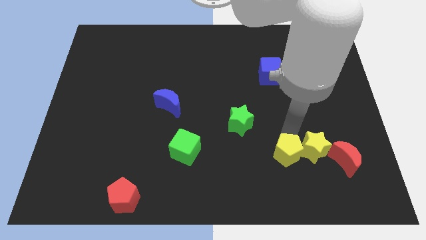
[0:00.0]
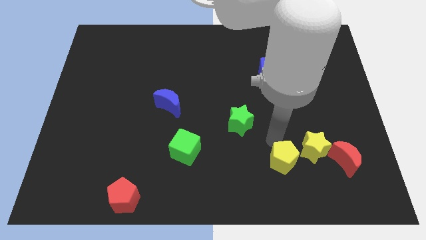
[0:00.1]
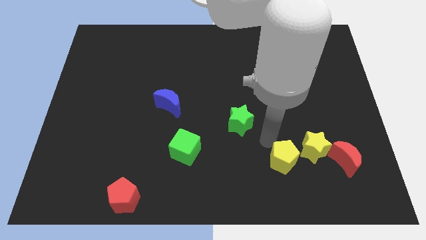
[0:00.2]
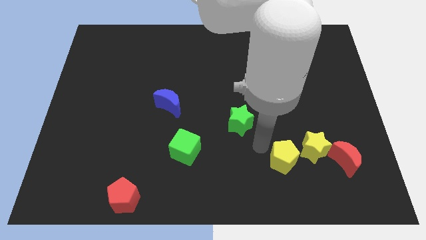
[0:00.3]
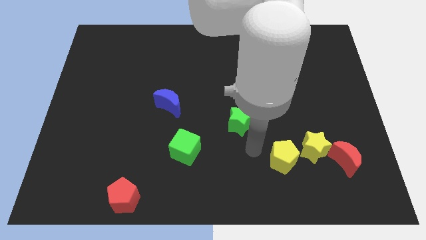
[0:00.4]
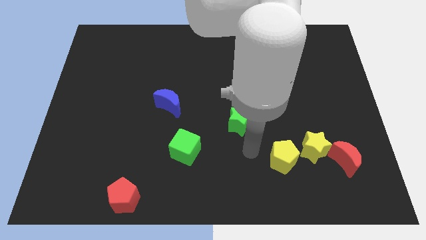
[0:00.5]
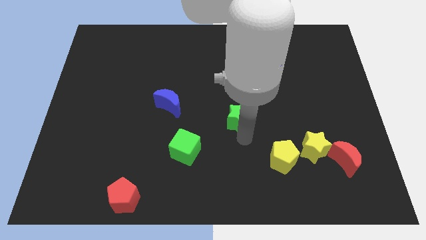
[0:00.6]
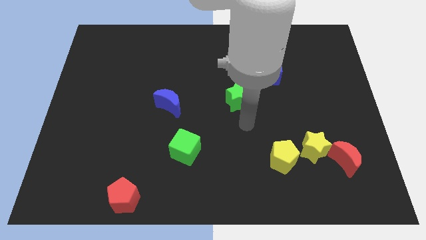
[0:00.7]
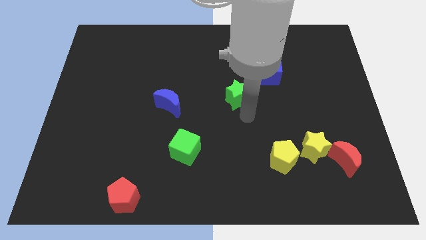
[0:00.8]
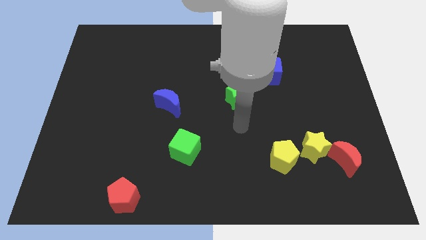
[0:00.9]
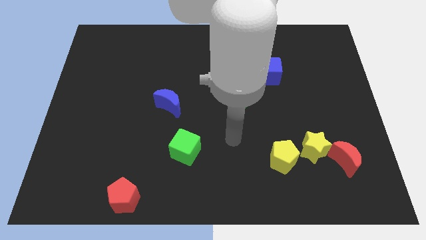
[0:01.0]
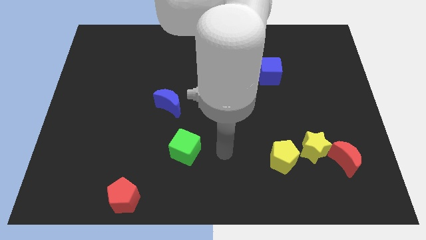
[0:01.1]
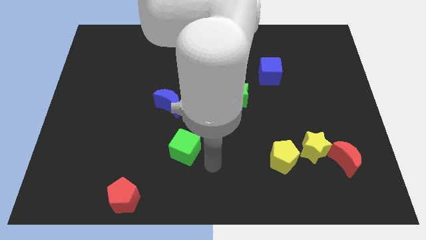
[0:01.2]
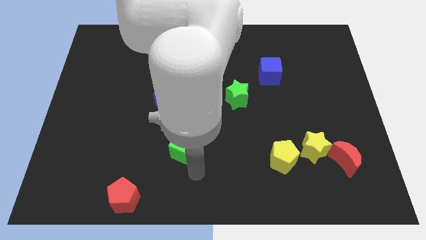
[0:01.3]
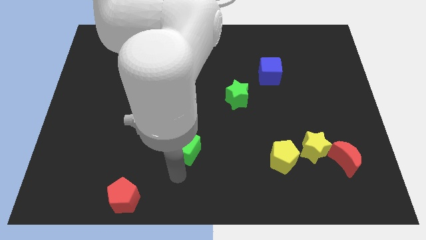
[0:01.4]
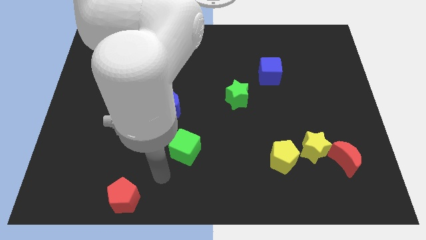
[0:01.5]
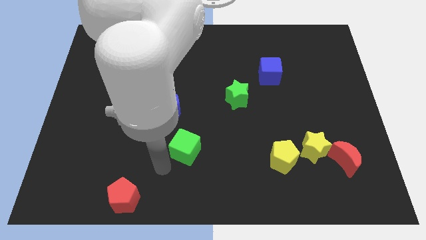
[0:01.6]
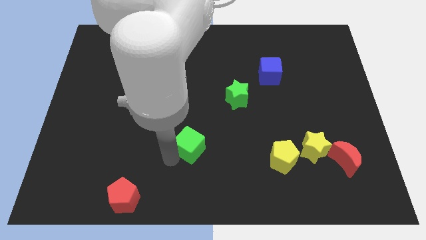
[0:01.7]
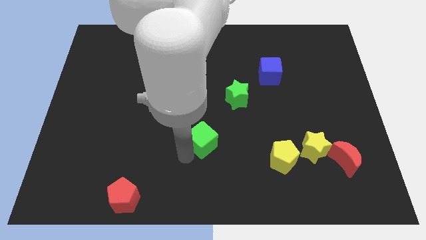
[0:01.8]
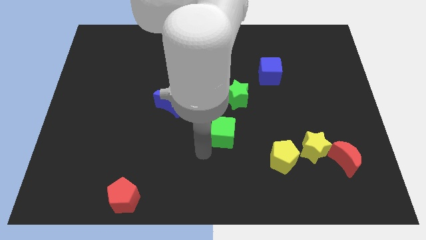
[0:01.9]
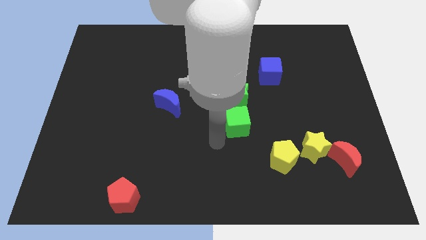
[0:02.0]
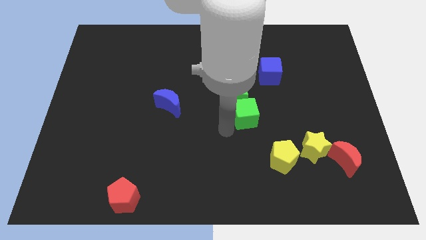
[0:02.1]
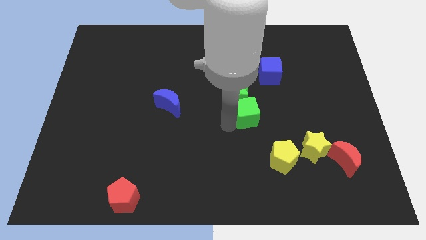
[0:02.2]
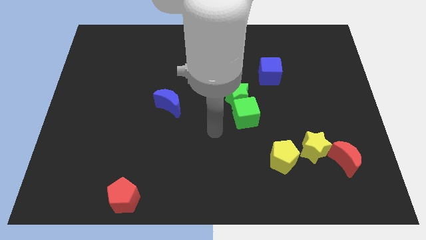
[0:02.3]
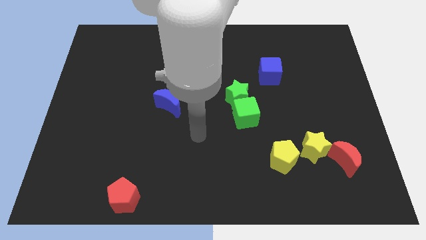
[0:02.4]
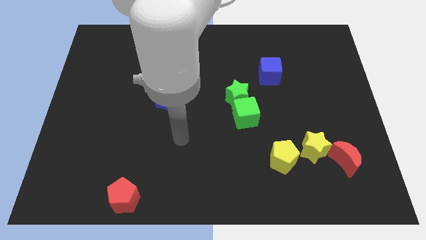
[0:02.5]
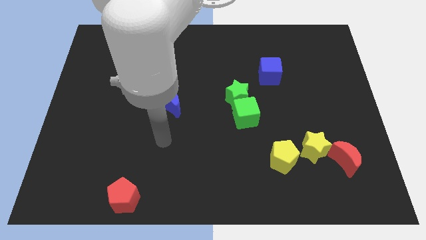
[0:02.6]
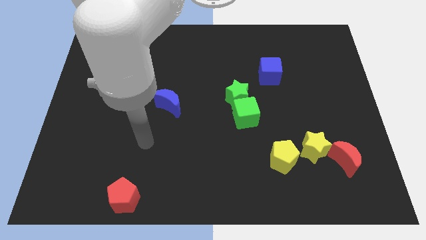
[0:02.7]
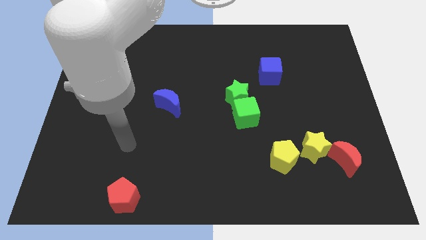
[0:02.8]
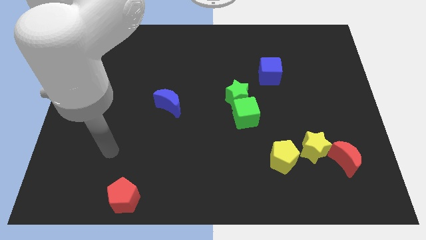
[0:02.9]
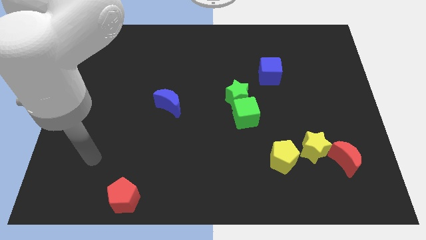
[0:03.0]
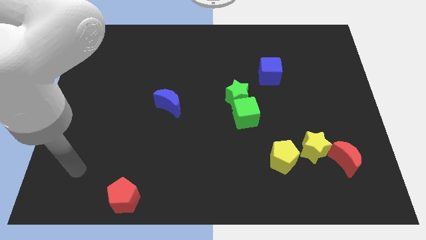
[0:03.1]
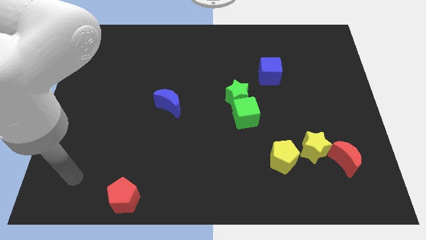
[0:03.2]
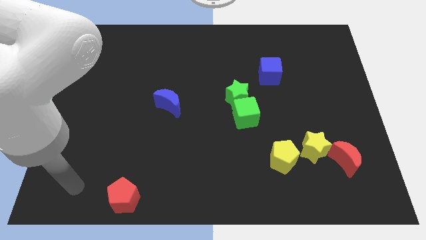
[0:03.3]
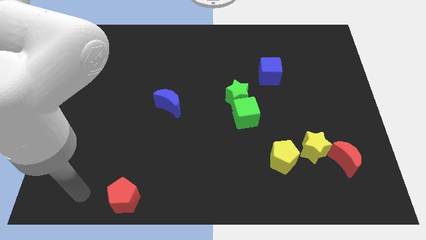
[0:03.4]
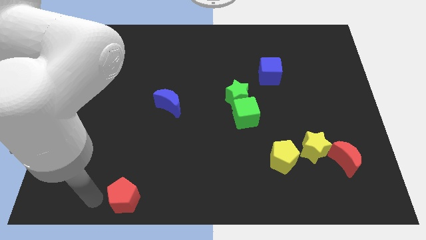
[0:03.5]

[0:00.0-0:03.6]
push green cube near to green star

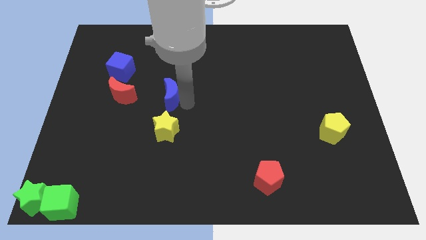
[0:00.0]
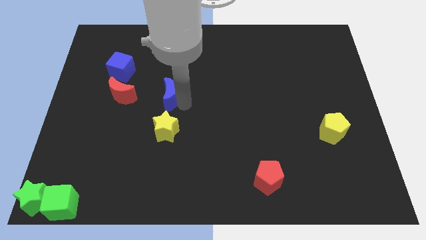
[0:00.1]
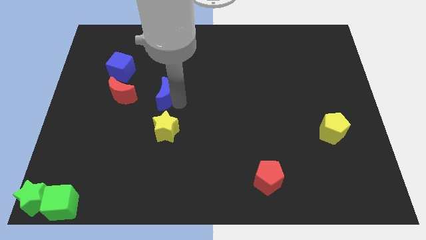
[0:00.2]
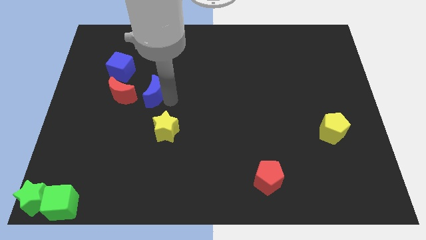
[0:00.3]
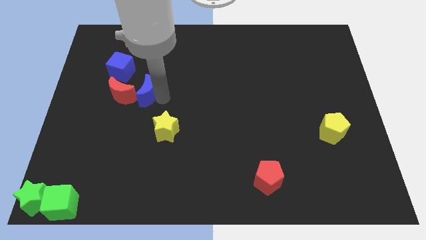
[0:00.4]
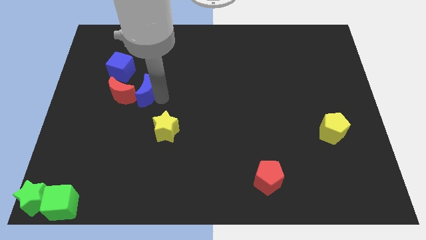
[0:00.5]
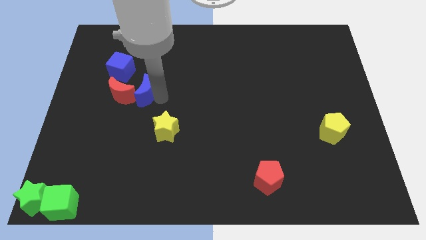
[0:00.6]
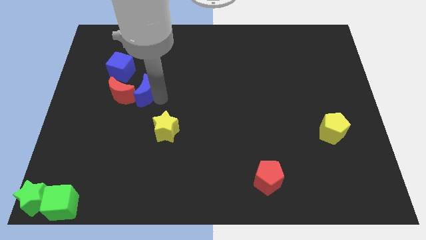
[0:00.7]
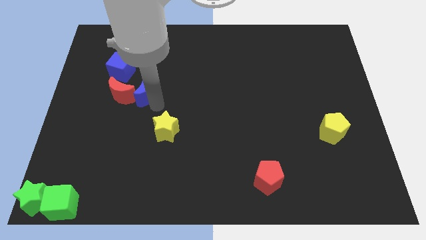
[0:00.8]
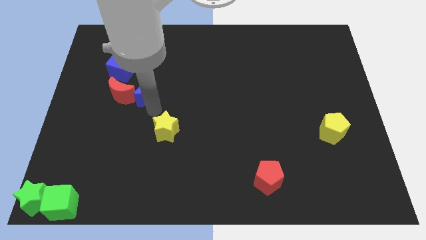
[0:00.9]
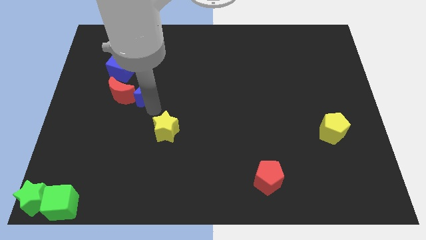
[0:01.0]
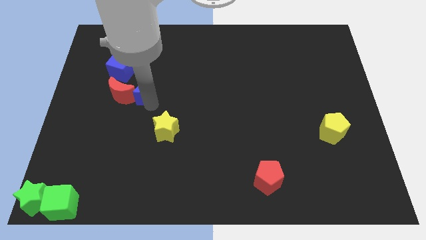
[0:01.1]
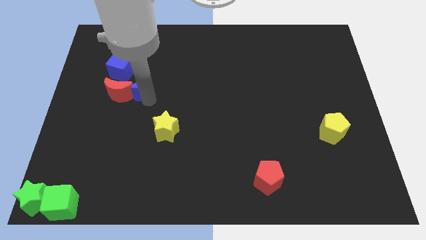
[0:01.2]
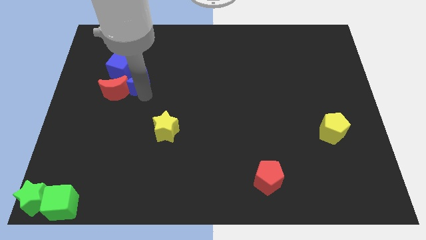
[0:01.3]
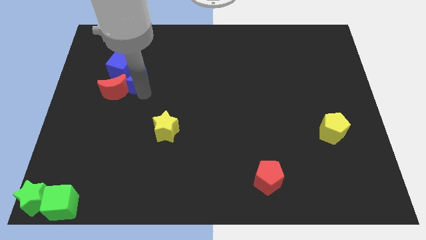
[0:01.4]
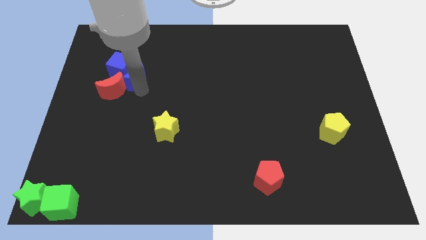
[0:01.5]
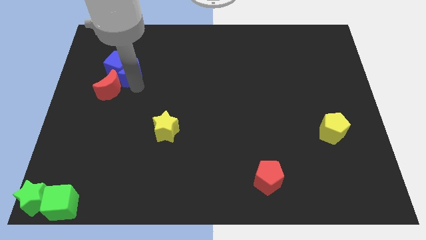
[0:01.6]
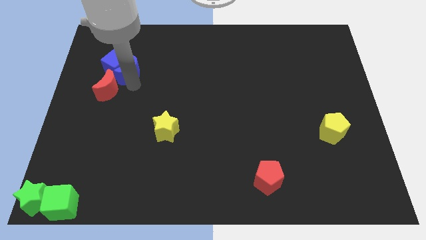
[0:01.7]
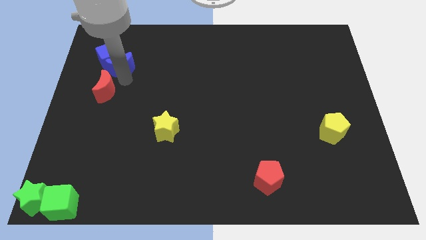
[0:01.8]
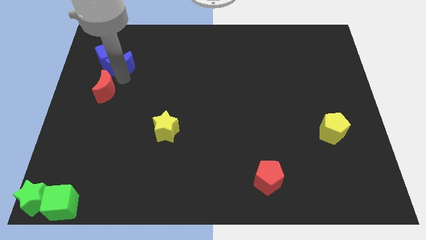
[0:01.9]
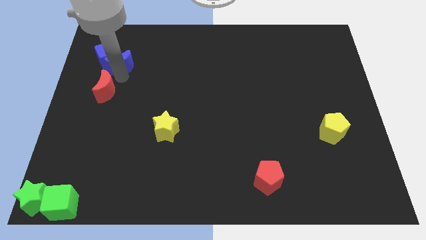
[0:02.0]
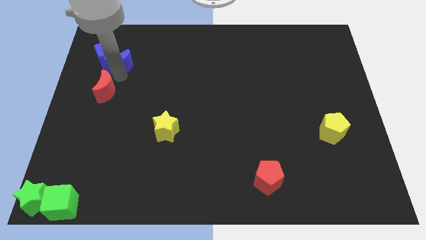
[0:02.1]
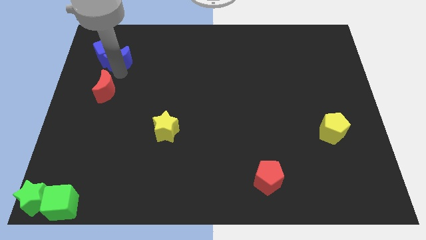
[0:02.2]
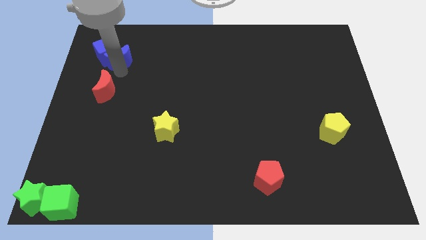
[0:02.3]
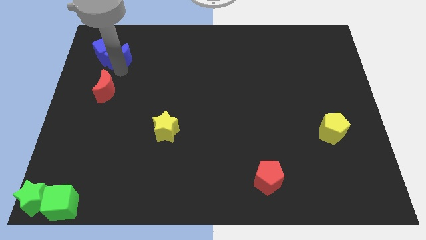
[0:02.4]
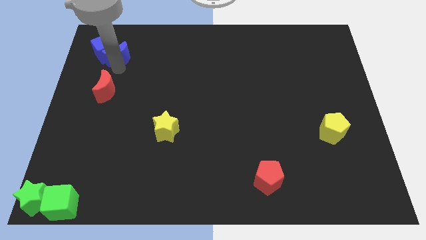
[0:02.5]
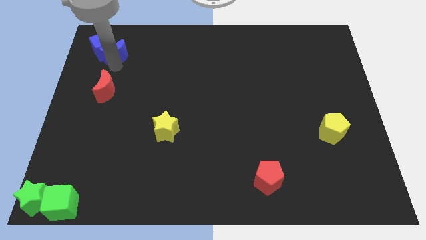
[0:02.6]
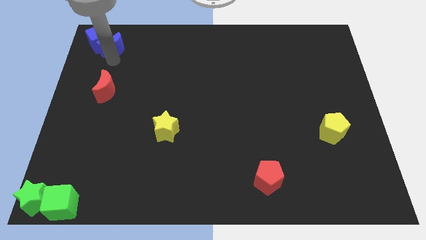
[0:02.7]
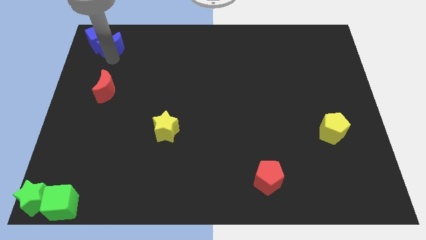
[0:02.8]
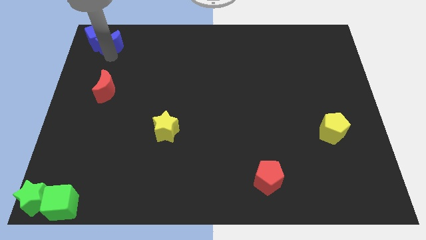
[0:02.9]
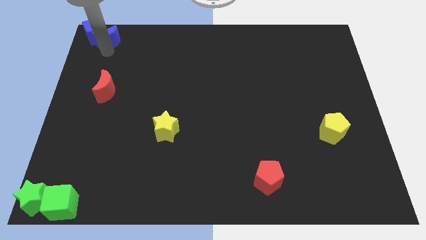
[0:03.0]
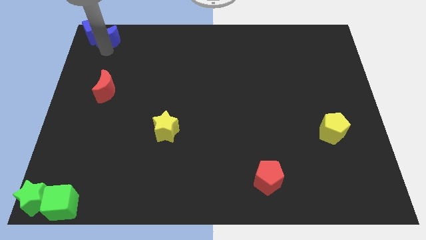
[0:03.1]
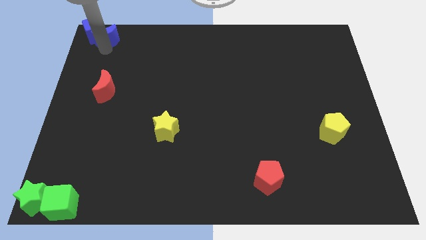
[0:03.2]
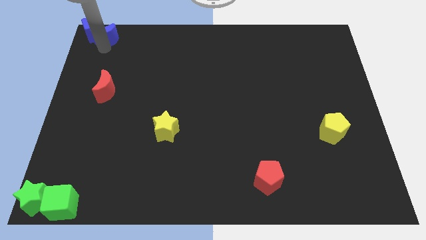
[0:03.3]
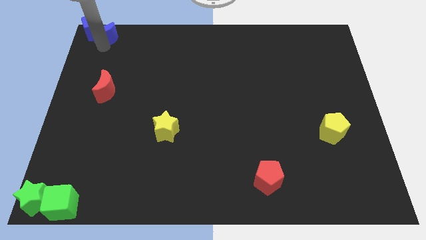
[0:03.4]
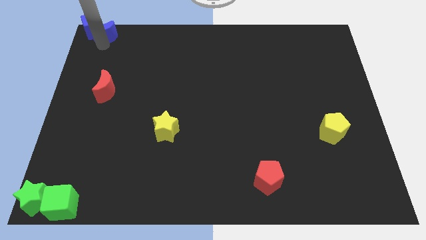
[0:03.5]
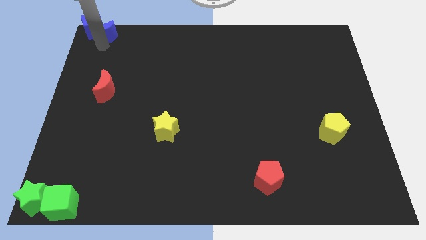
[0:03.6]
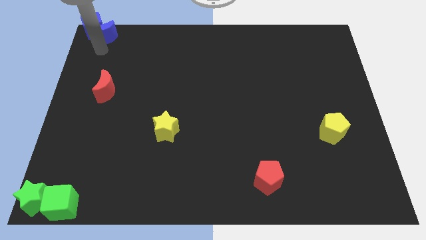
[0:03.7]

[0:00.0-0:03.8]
push blue blocks to top left corner

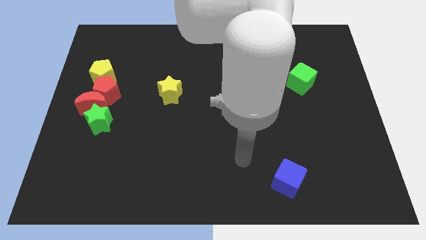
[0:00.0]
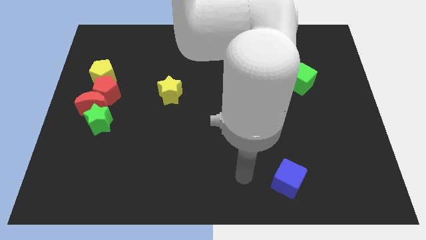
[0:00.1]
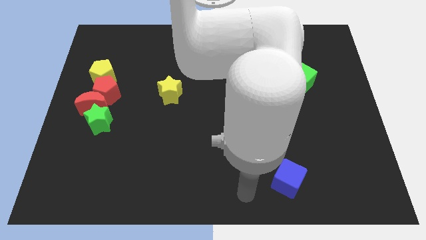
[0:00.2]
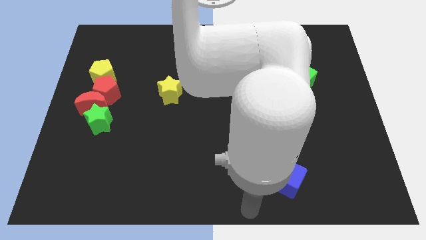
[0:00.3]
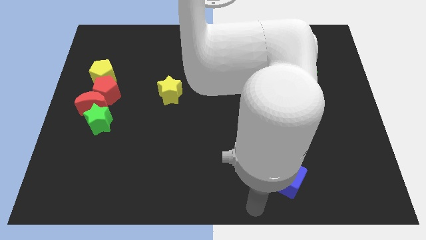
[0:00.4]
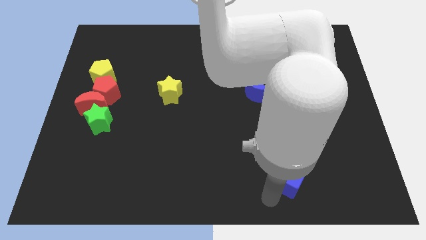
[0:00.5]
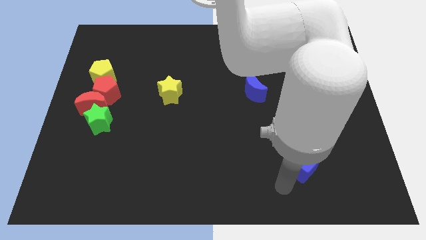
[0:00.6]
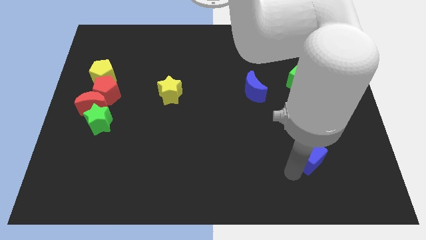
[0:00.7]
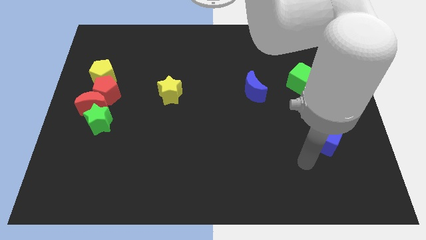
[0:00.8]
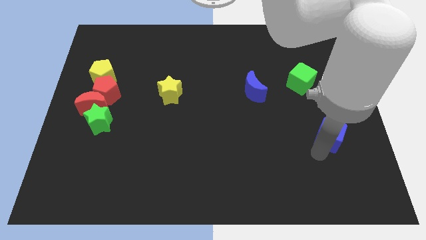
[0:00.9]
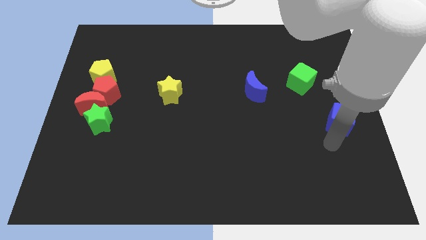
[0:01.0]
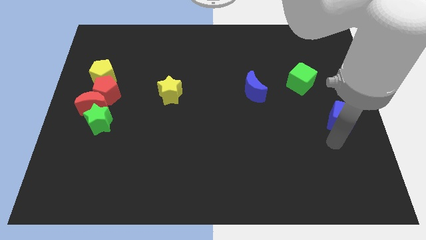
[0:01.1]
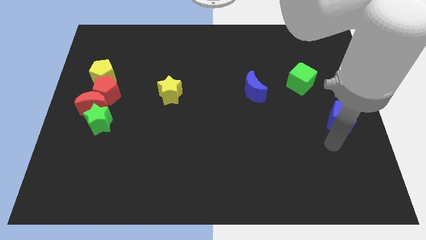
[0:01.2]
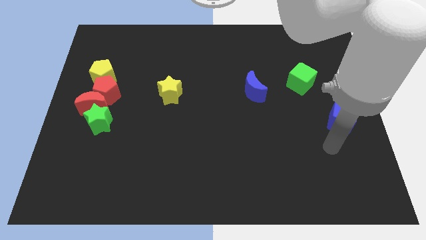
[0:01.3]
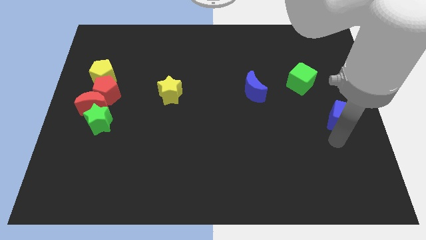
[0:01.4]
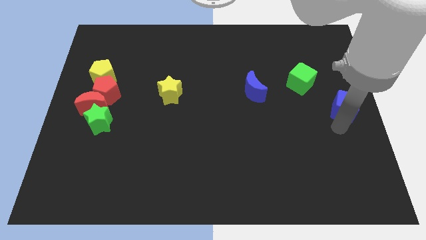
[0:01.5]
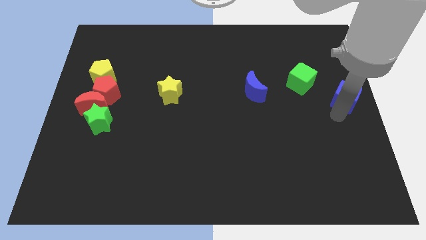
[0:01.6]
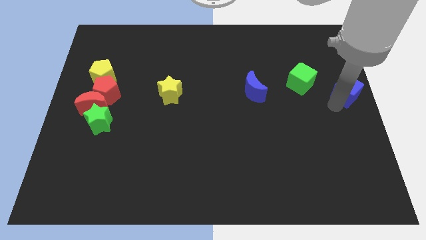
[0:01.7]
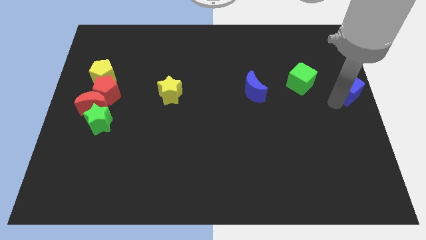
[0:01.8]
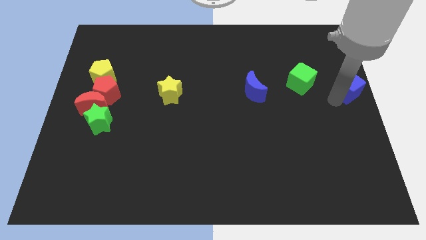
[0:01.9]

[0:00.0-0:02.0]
push blue cube to the right of green cube
